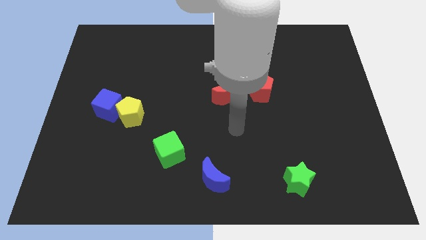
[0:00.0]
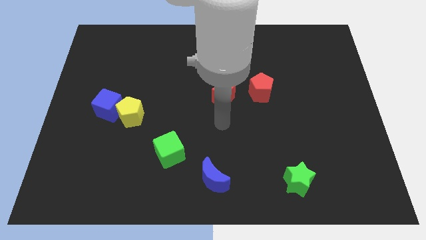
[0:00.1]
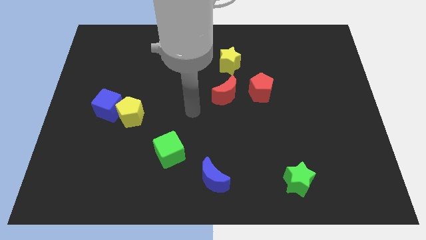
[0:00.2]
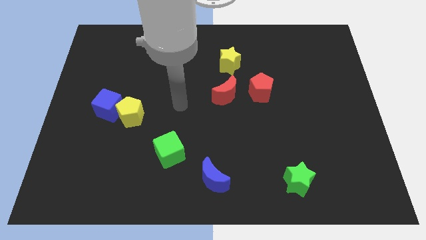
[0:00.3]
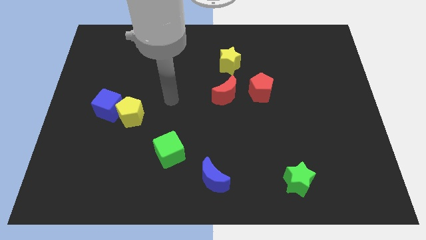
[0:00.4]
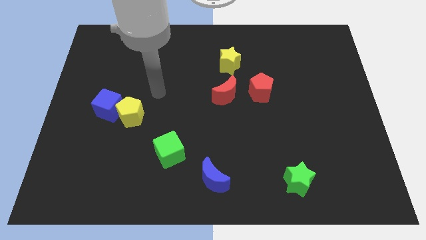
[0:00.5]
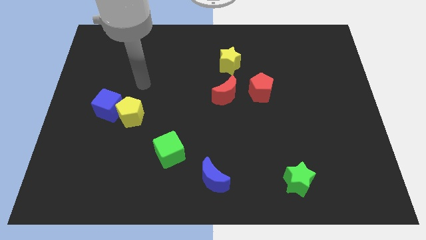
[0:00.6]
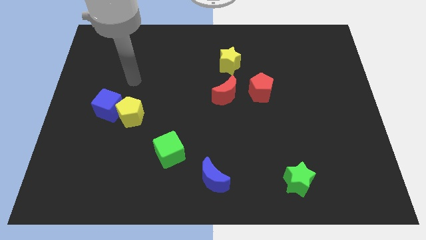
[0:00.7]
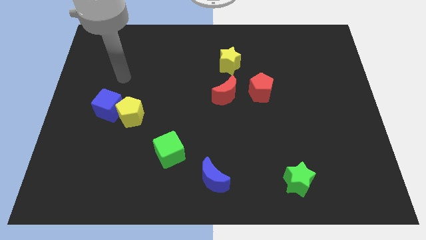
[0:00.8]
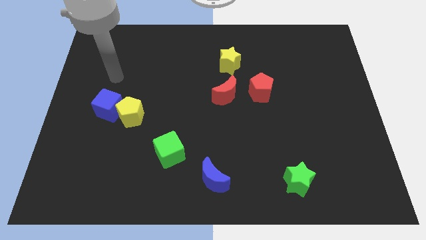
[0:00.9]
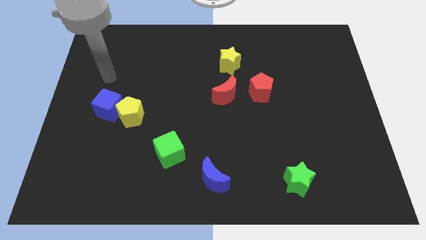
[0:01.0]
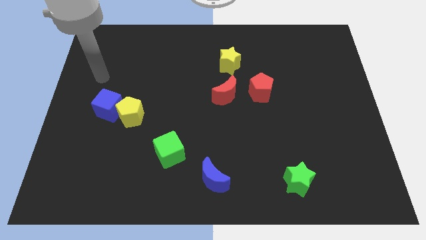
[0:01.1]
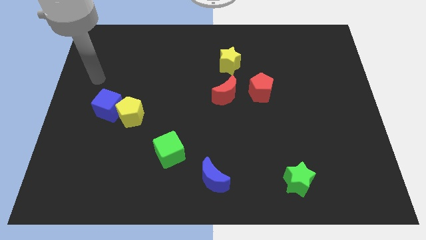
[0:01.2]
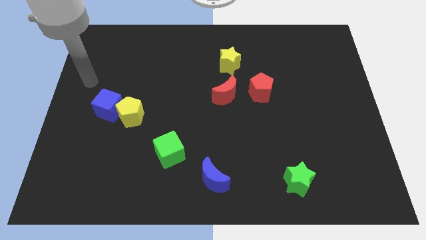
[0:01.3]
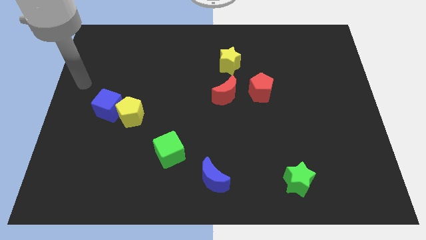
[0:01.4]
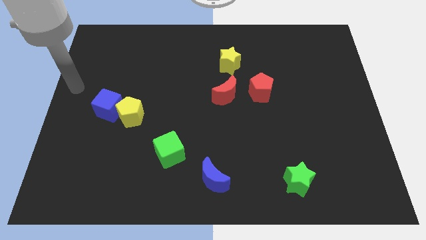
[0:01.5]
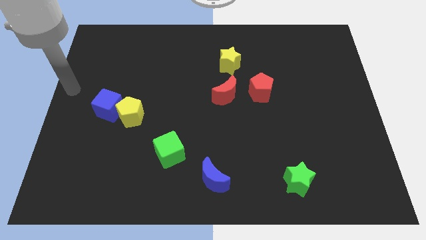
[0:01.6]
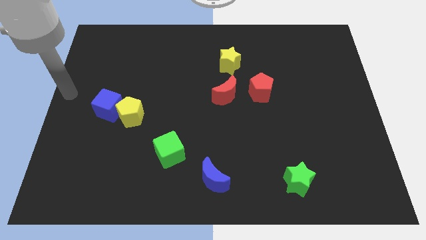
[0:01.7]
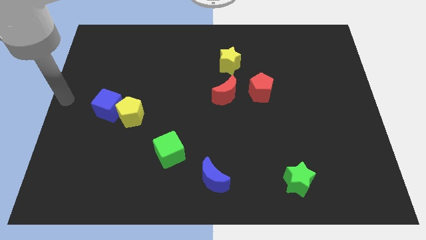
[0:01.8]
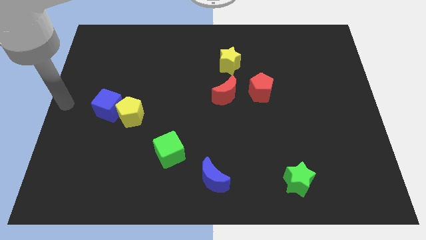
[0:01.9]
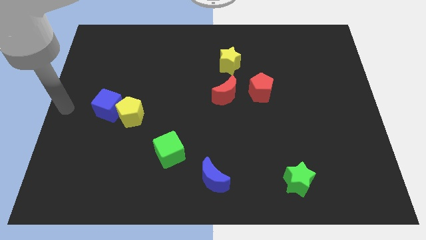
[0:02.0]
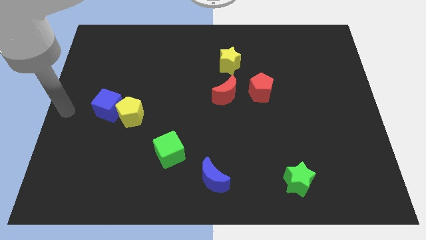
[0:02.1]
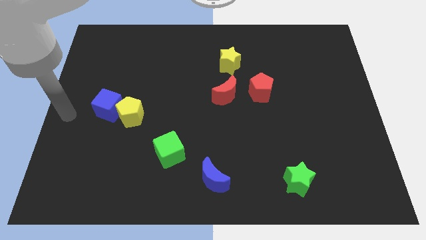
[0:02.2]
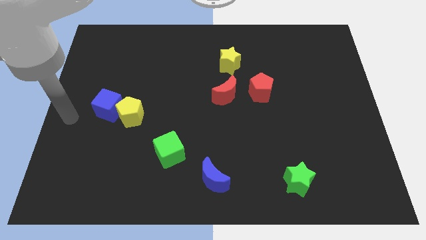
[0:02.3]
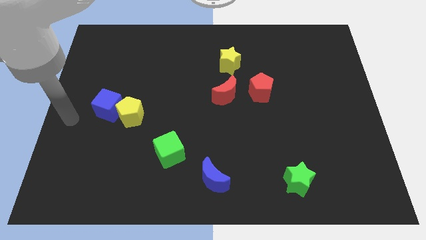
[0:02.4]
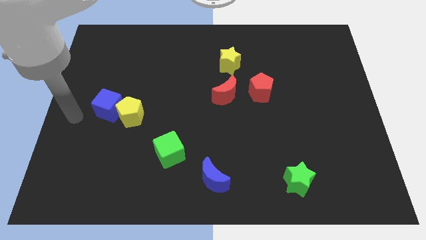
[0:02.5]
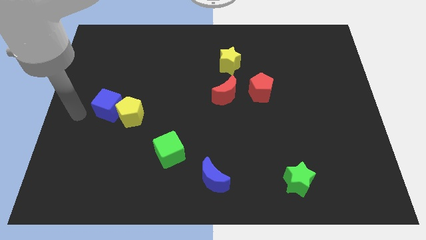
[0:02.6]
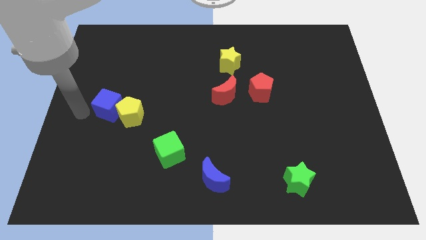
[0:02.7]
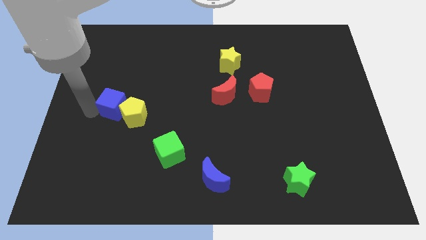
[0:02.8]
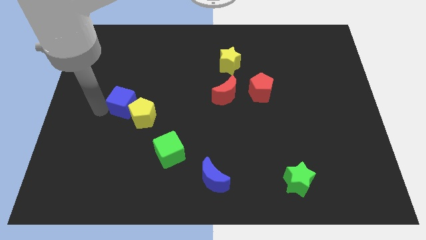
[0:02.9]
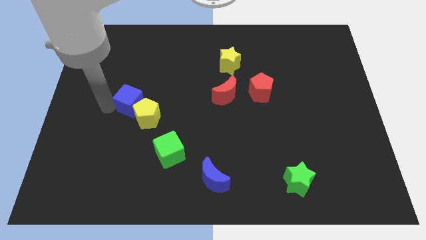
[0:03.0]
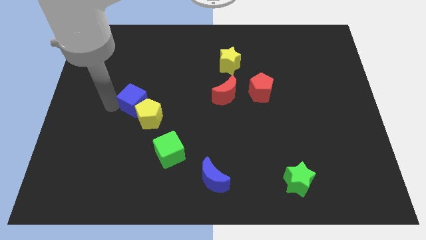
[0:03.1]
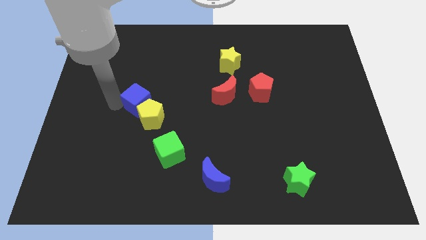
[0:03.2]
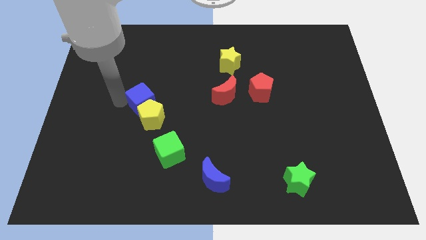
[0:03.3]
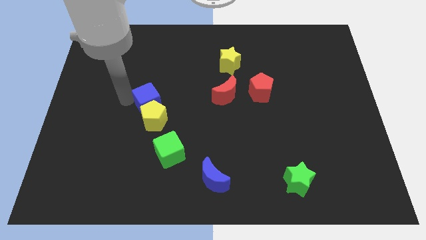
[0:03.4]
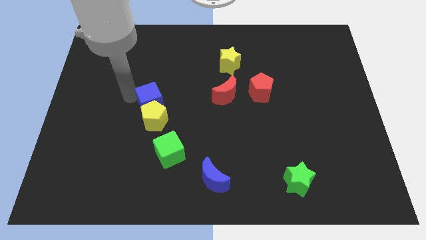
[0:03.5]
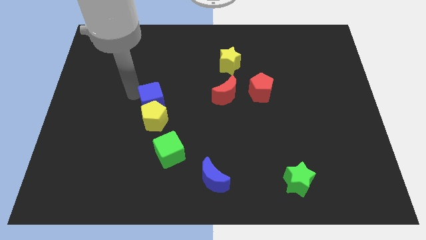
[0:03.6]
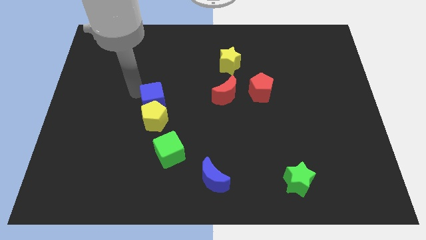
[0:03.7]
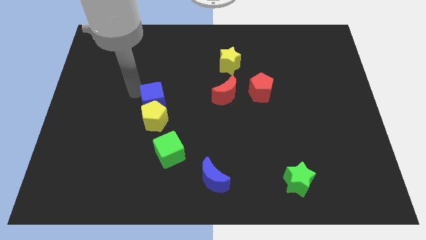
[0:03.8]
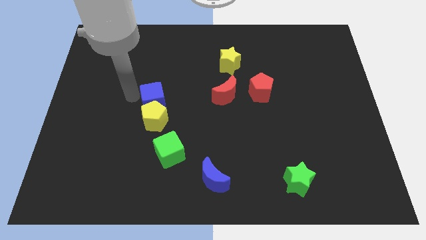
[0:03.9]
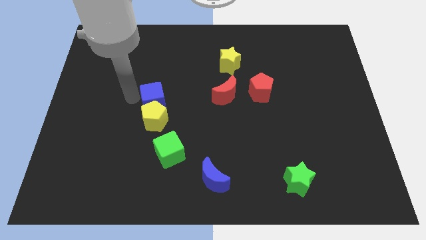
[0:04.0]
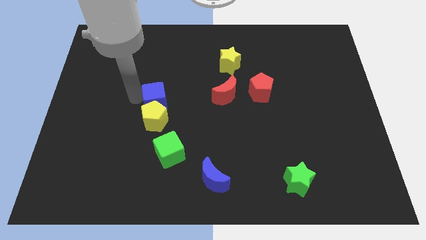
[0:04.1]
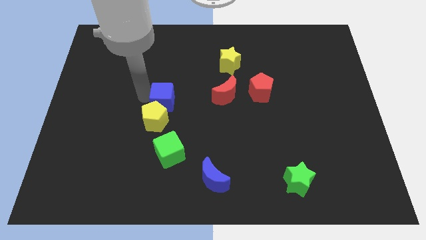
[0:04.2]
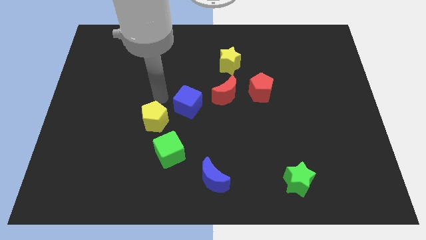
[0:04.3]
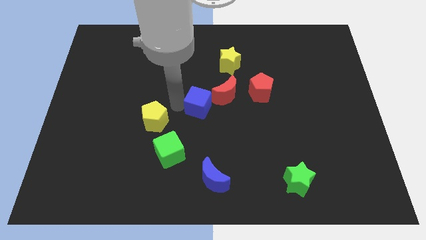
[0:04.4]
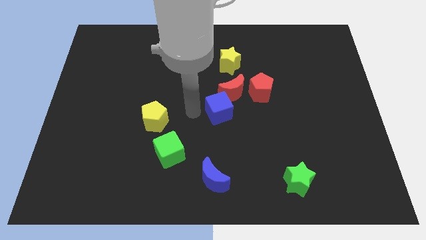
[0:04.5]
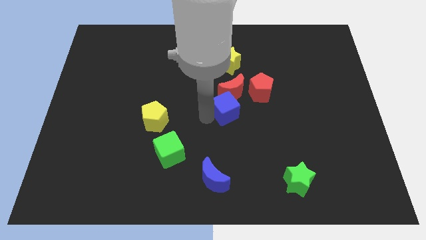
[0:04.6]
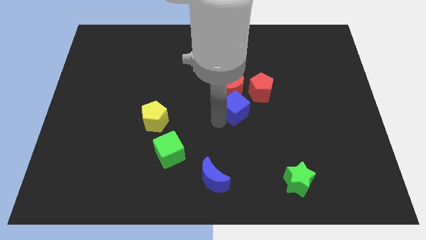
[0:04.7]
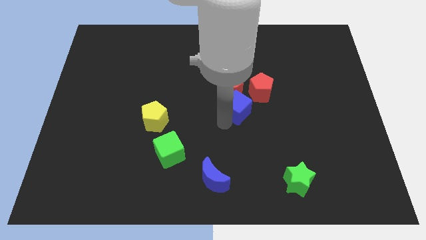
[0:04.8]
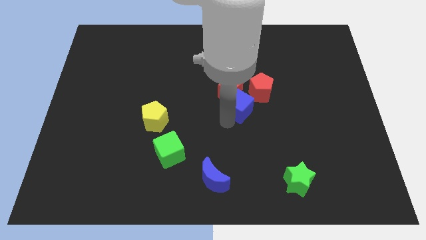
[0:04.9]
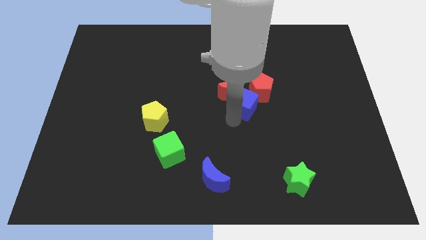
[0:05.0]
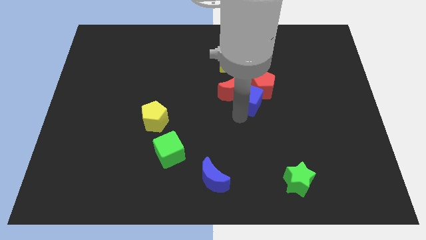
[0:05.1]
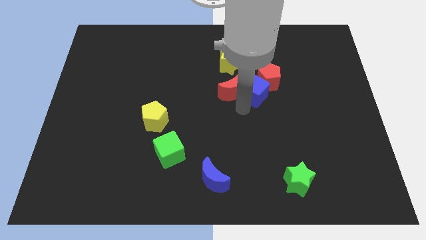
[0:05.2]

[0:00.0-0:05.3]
slide the blue cube next to the red pentagon

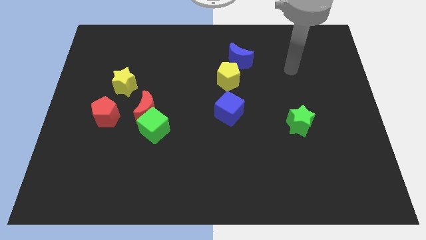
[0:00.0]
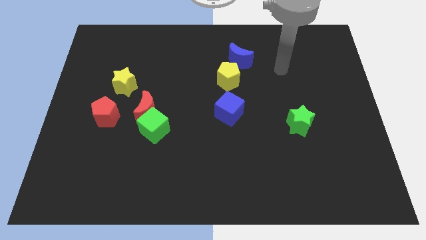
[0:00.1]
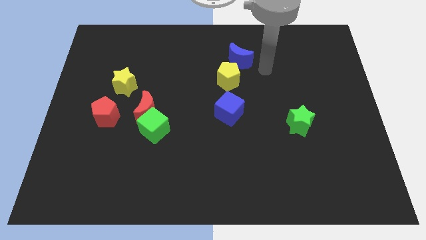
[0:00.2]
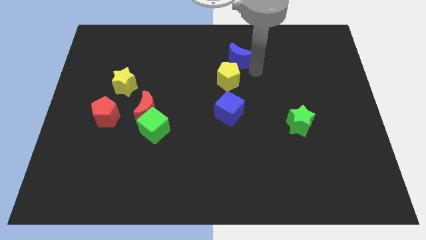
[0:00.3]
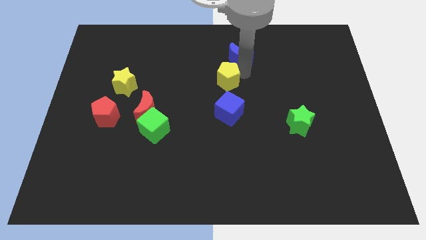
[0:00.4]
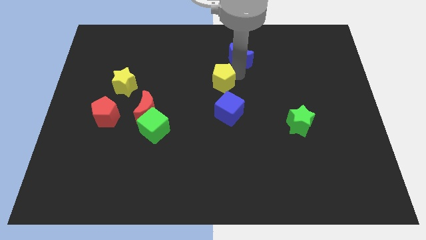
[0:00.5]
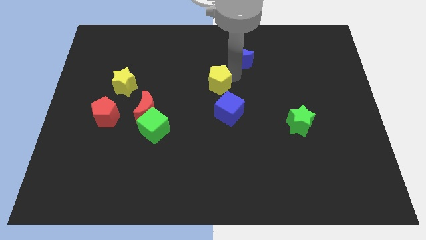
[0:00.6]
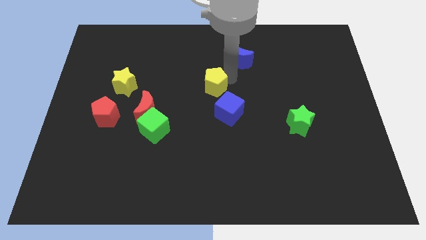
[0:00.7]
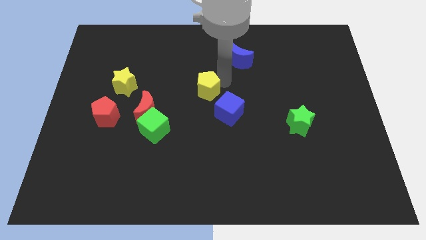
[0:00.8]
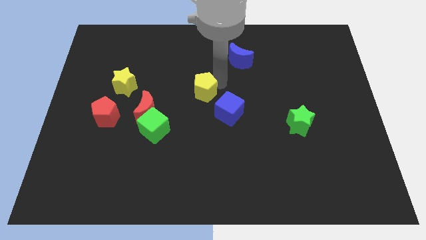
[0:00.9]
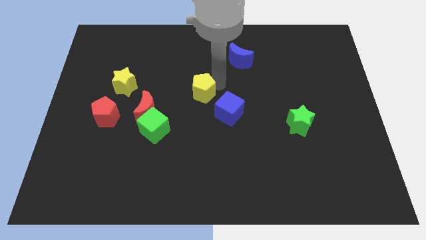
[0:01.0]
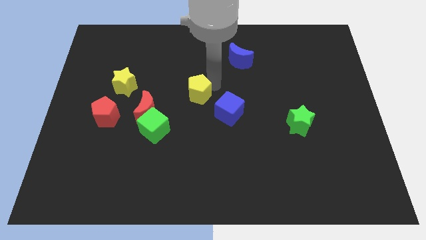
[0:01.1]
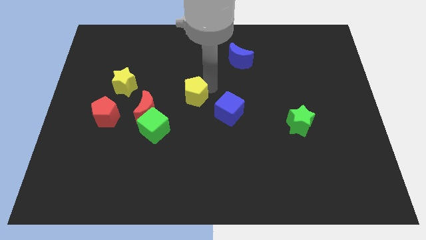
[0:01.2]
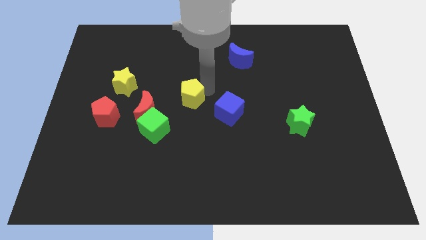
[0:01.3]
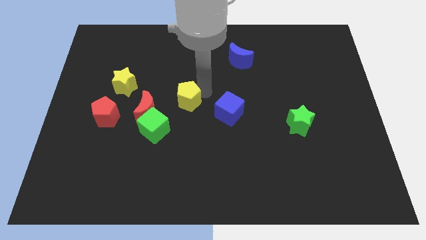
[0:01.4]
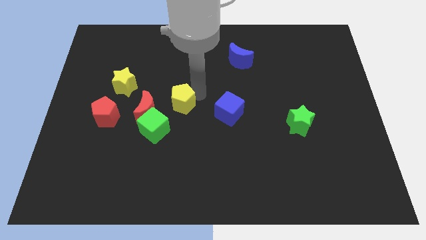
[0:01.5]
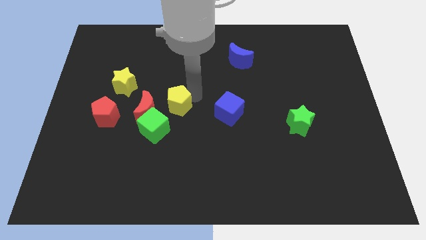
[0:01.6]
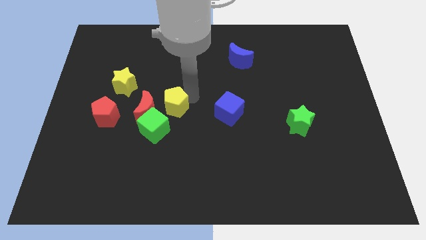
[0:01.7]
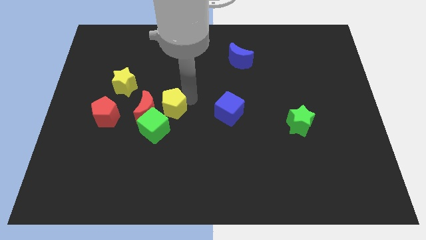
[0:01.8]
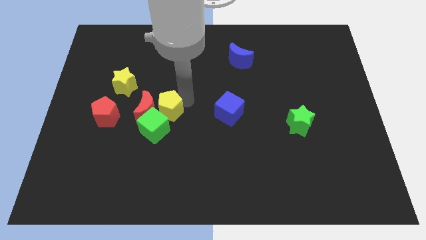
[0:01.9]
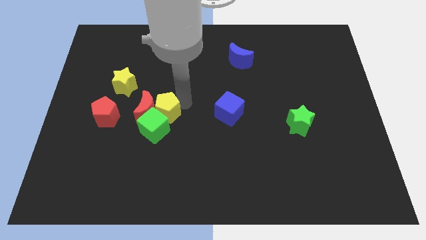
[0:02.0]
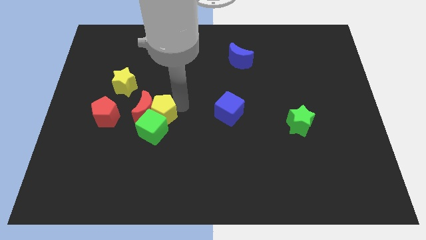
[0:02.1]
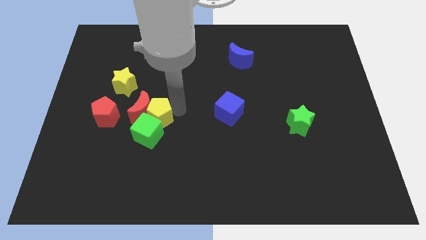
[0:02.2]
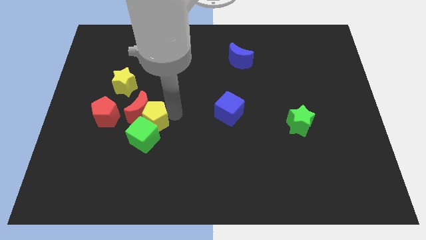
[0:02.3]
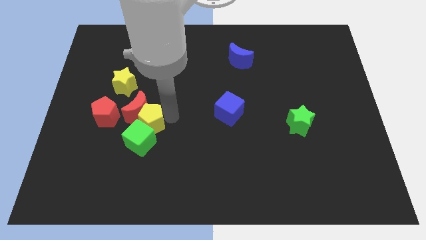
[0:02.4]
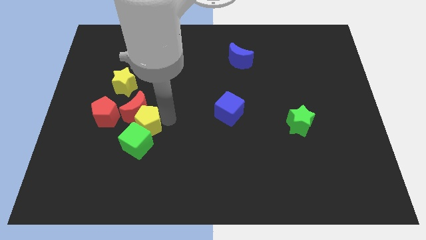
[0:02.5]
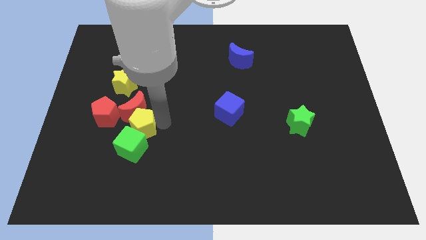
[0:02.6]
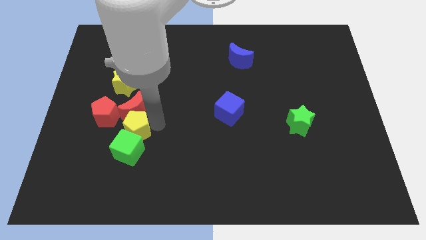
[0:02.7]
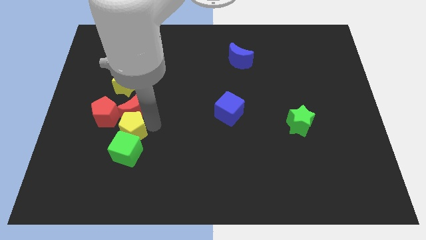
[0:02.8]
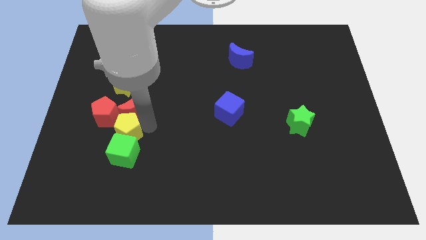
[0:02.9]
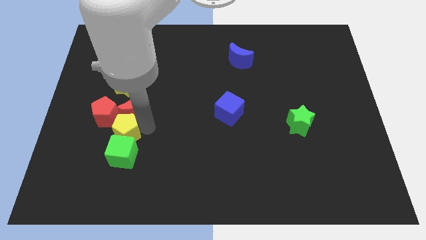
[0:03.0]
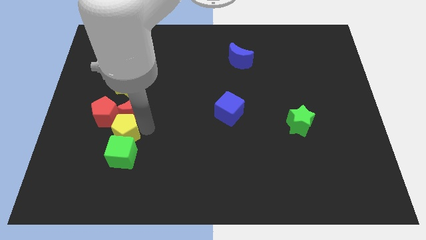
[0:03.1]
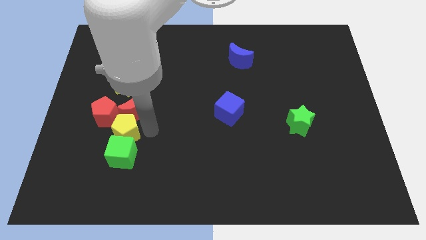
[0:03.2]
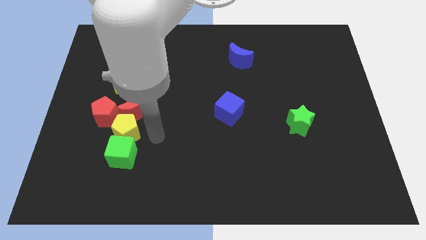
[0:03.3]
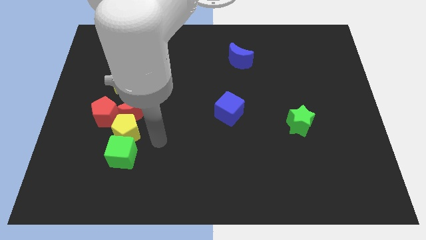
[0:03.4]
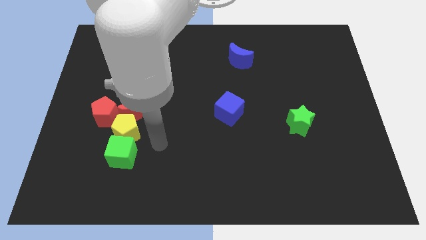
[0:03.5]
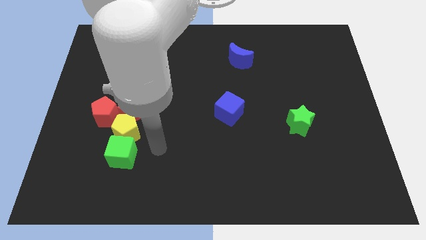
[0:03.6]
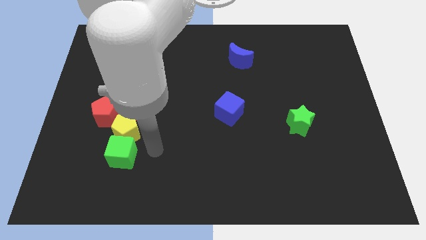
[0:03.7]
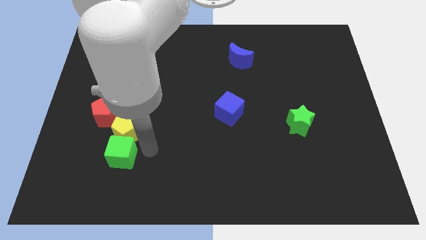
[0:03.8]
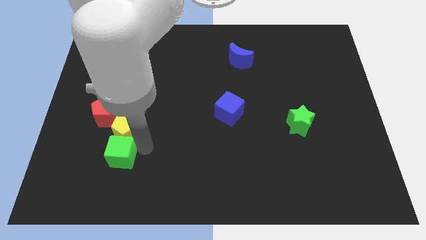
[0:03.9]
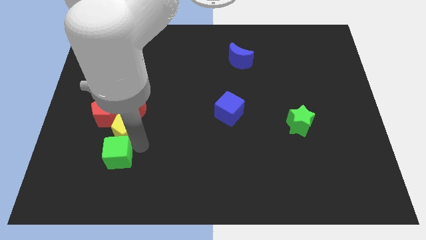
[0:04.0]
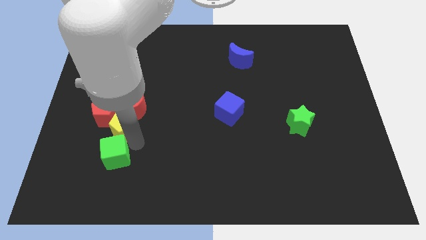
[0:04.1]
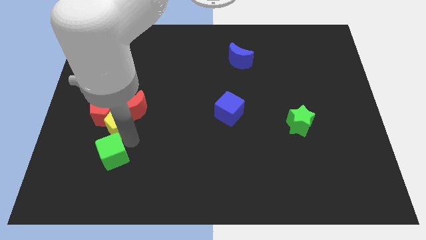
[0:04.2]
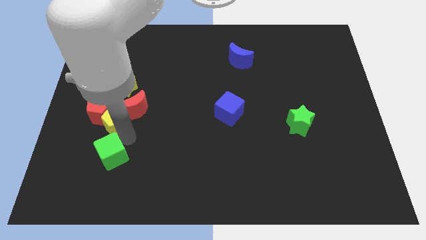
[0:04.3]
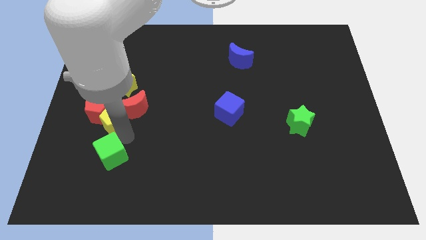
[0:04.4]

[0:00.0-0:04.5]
put the yellow pentagon close to the red pentagon
